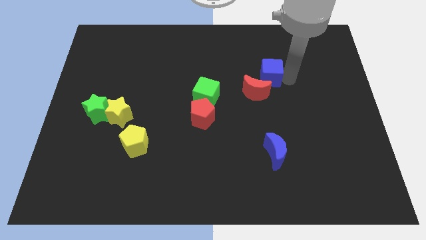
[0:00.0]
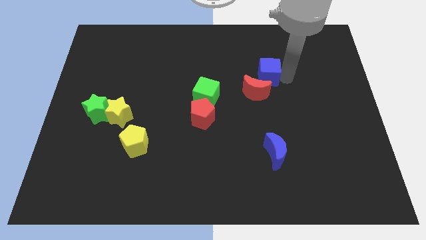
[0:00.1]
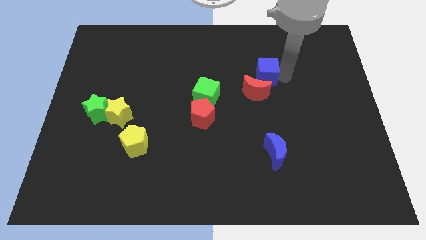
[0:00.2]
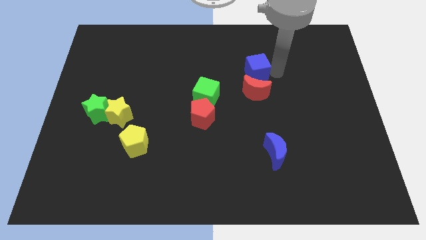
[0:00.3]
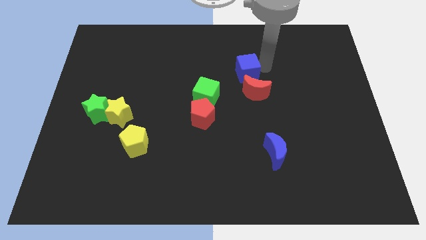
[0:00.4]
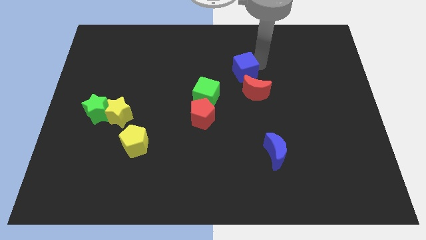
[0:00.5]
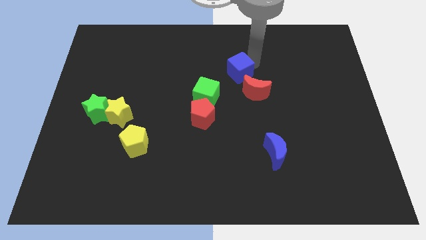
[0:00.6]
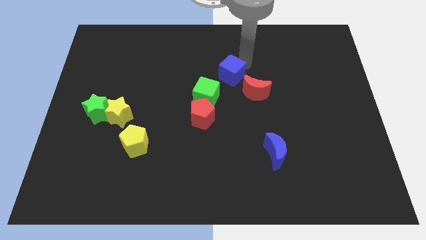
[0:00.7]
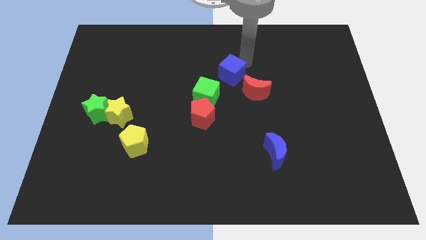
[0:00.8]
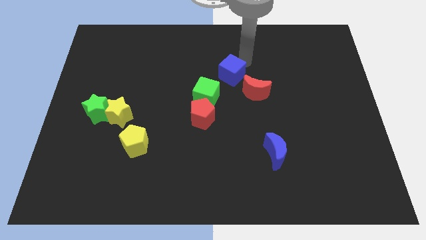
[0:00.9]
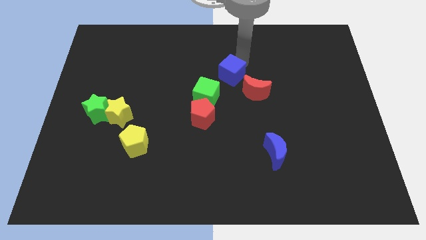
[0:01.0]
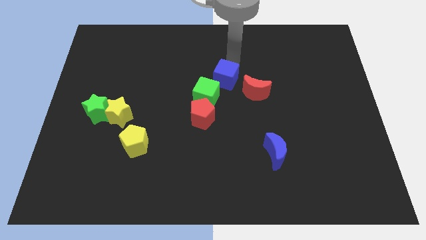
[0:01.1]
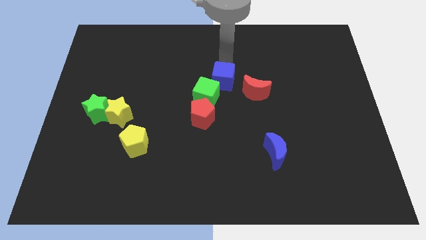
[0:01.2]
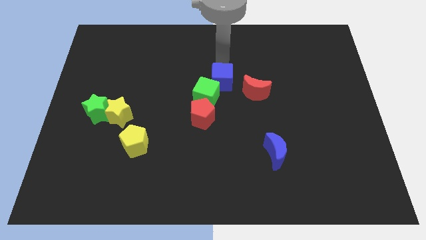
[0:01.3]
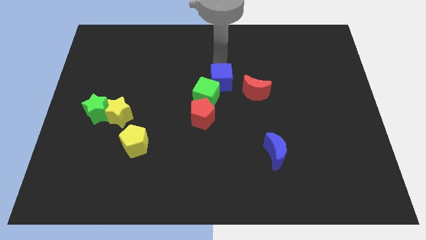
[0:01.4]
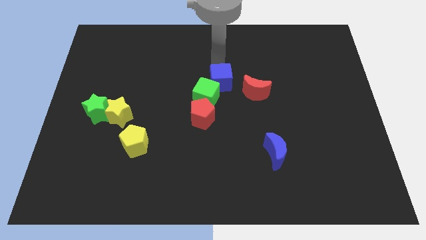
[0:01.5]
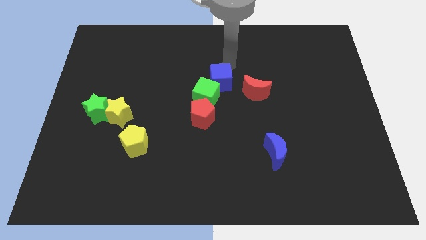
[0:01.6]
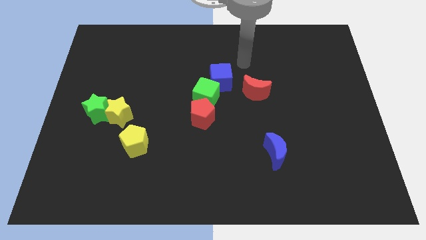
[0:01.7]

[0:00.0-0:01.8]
move the blue cube to the left side of the red crescent

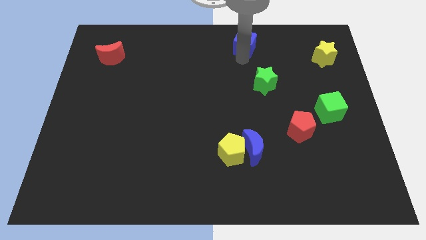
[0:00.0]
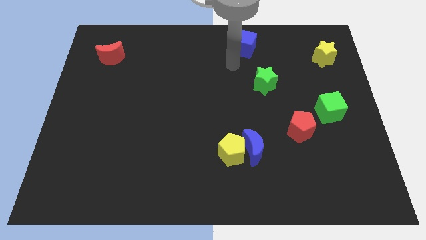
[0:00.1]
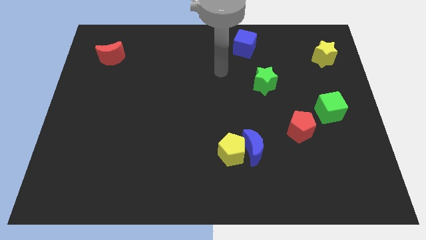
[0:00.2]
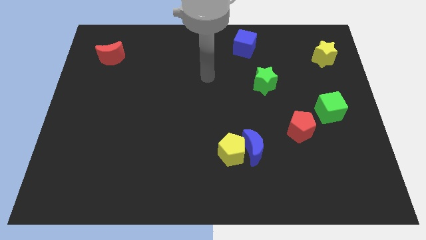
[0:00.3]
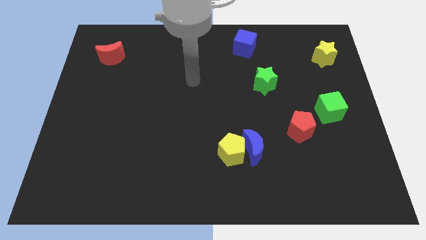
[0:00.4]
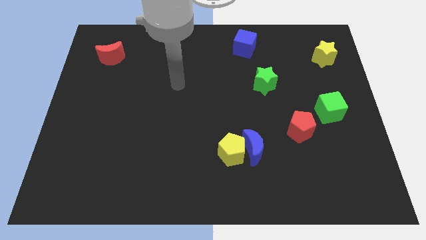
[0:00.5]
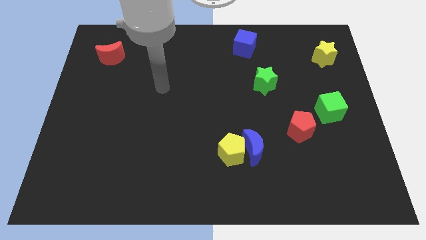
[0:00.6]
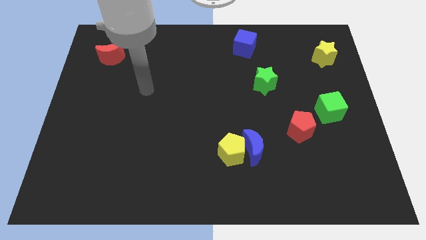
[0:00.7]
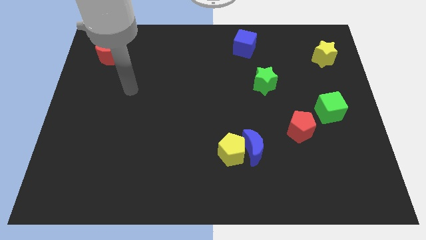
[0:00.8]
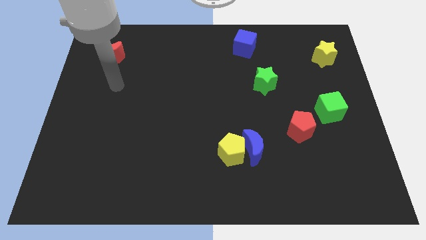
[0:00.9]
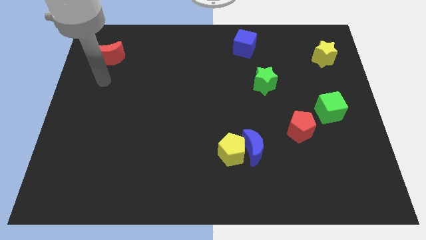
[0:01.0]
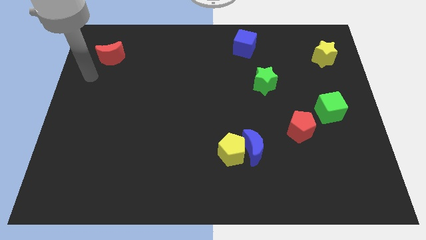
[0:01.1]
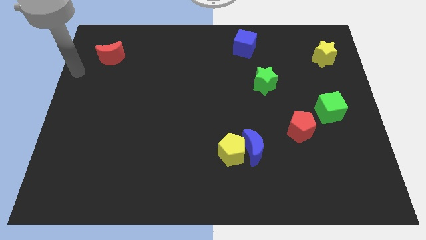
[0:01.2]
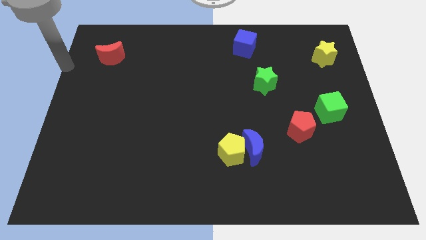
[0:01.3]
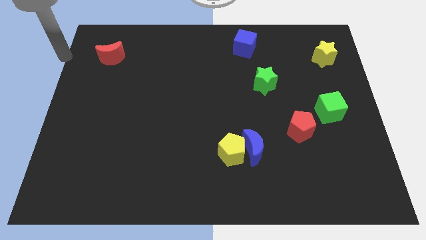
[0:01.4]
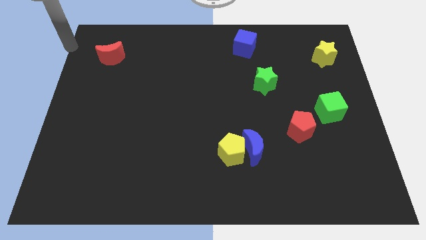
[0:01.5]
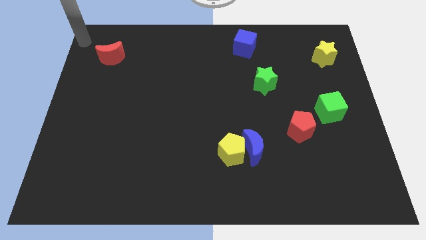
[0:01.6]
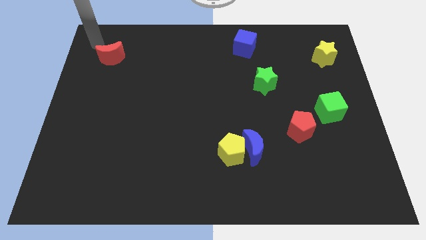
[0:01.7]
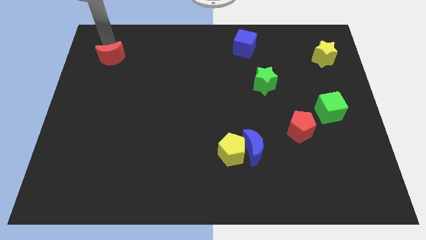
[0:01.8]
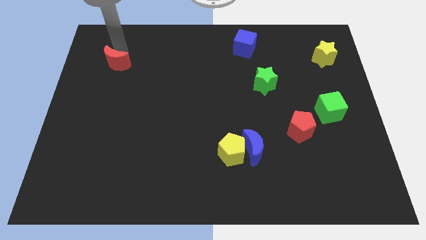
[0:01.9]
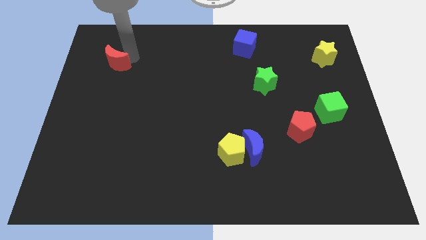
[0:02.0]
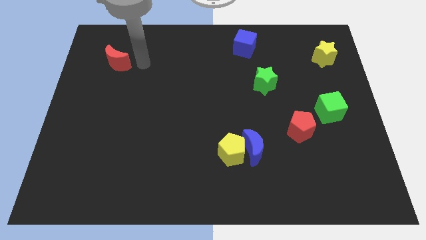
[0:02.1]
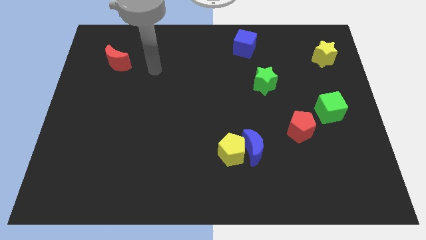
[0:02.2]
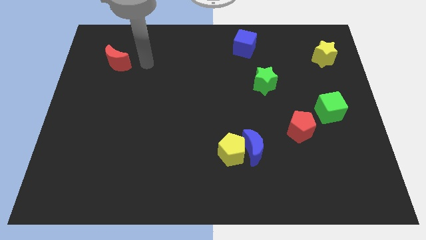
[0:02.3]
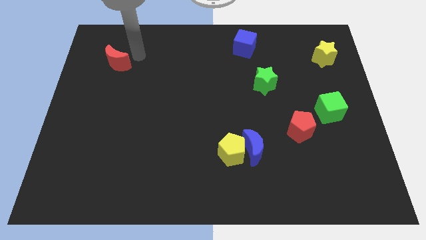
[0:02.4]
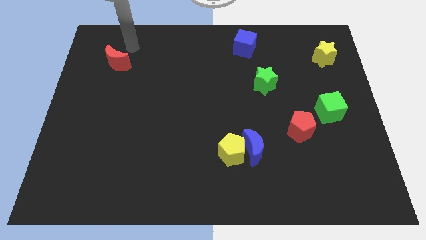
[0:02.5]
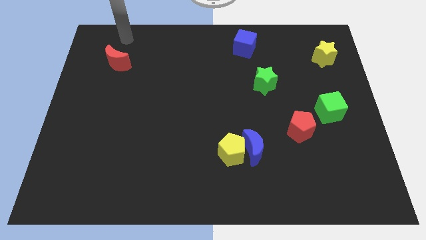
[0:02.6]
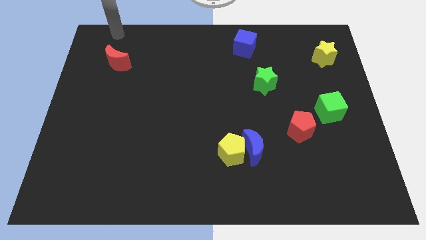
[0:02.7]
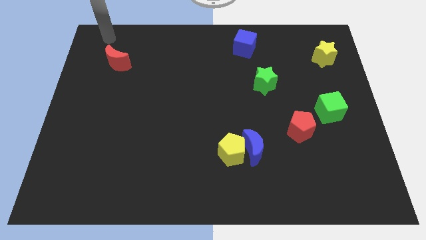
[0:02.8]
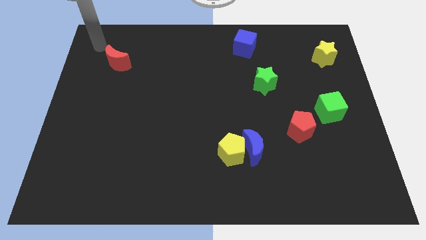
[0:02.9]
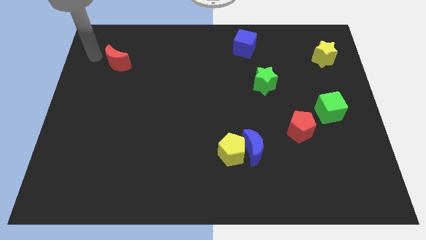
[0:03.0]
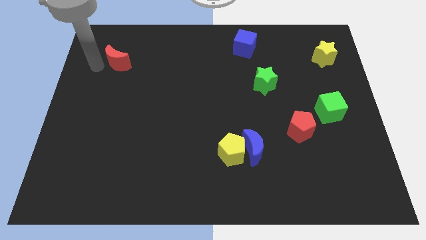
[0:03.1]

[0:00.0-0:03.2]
slightly move red moon

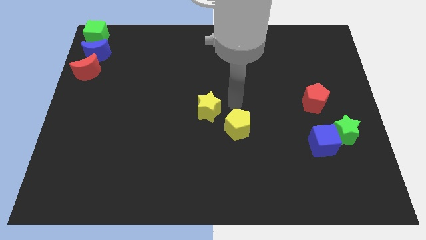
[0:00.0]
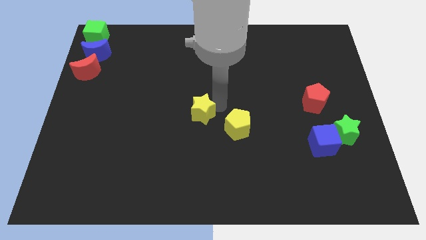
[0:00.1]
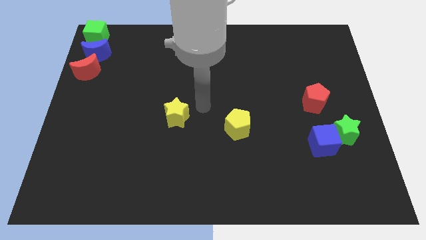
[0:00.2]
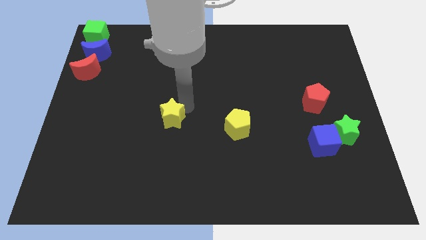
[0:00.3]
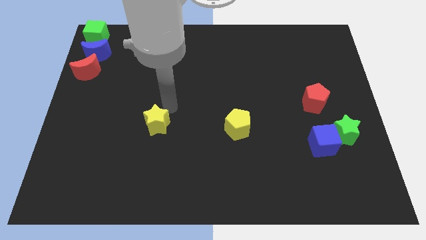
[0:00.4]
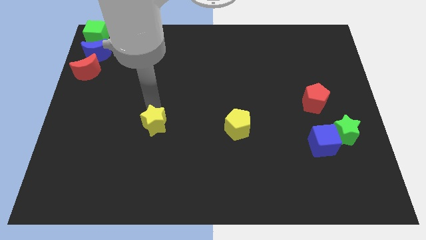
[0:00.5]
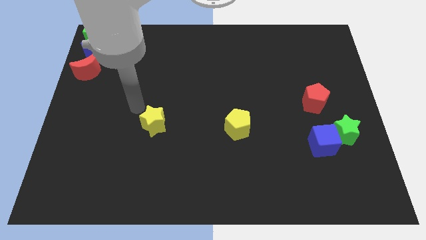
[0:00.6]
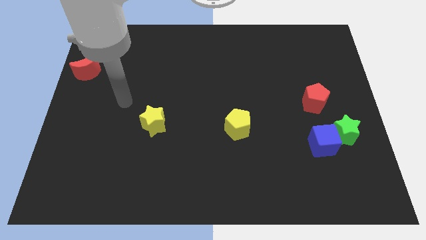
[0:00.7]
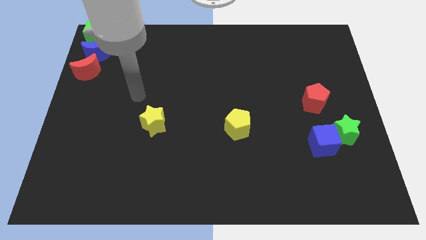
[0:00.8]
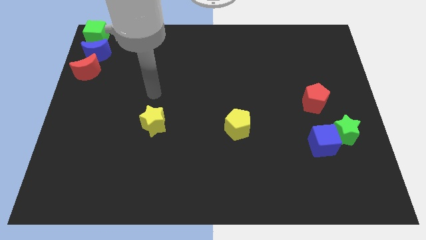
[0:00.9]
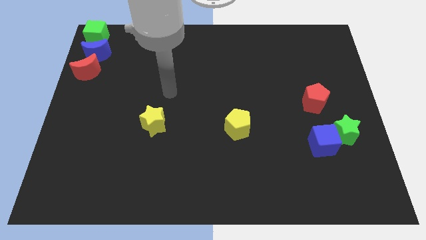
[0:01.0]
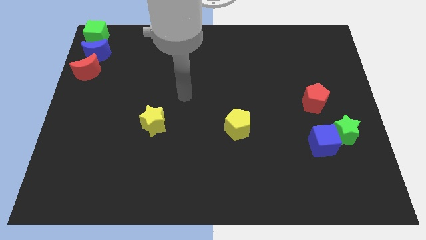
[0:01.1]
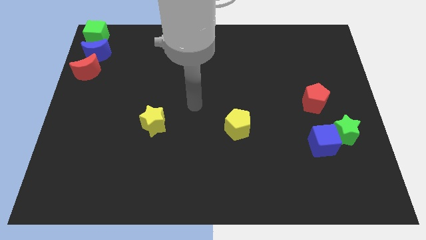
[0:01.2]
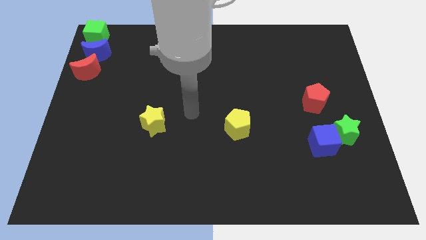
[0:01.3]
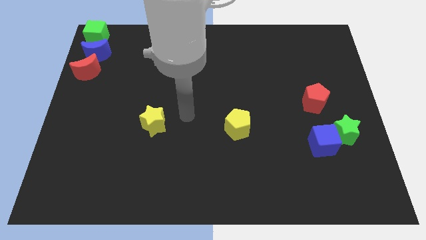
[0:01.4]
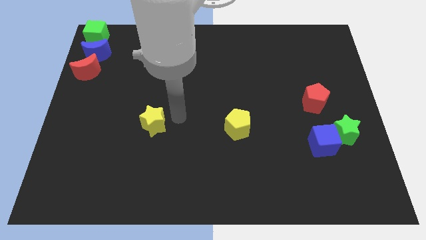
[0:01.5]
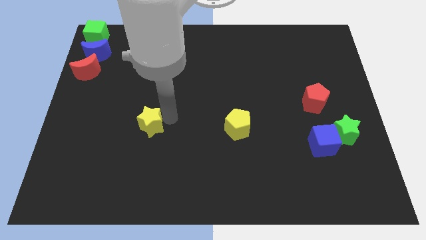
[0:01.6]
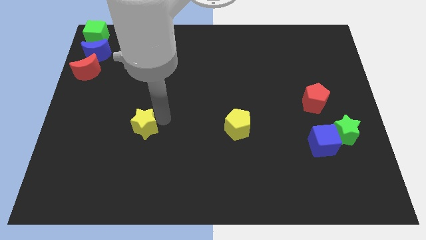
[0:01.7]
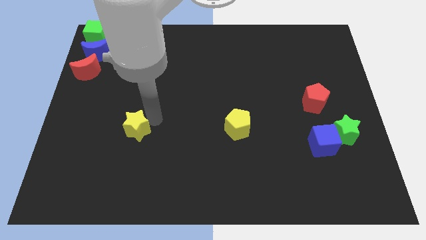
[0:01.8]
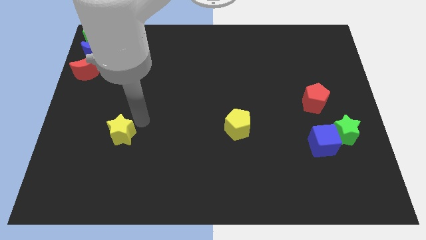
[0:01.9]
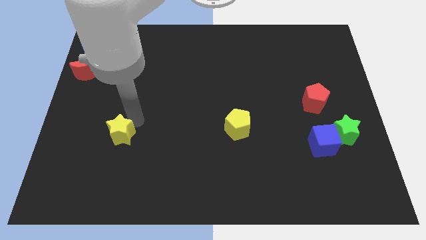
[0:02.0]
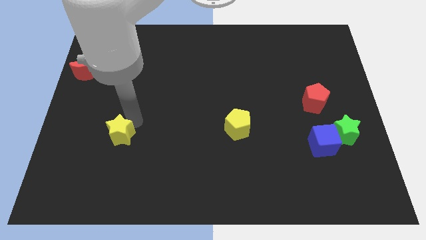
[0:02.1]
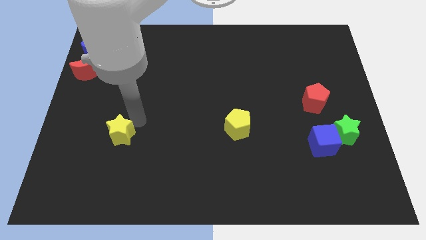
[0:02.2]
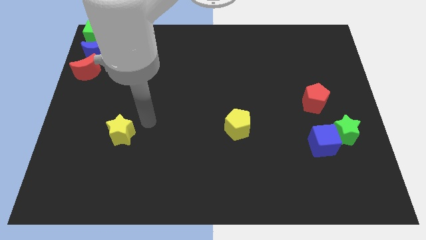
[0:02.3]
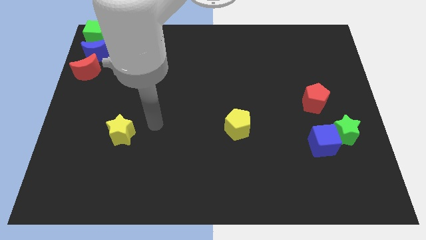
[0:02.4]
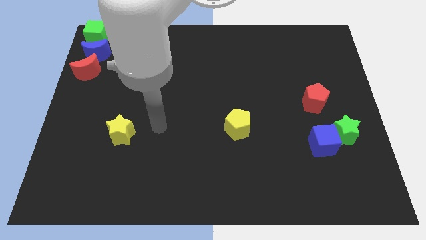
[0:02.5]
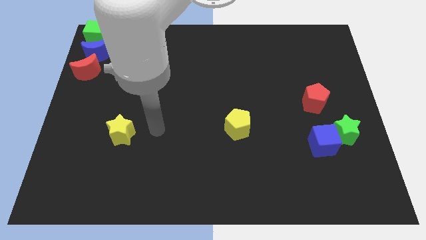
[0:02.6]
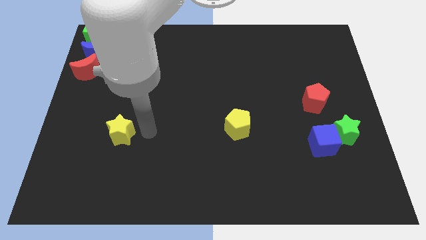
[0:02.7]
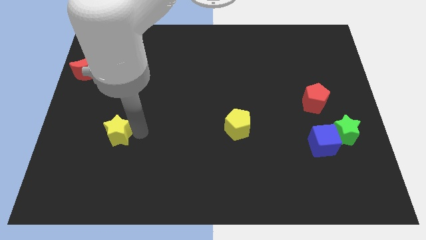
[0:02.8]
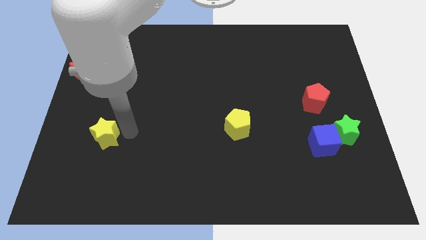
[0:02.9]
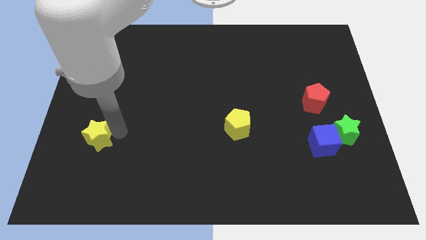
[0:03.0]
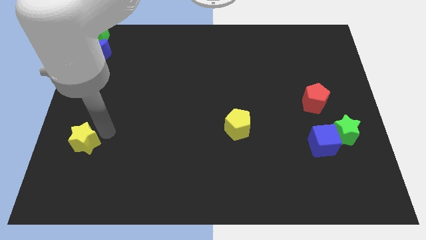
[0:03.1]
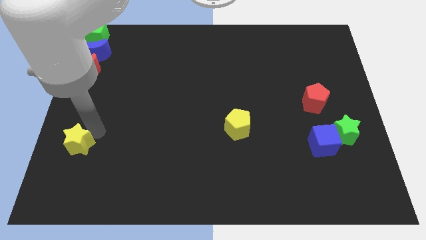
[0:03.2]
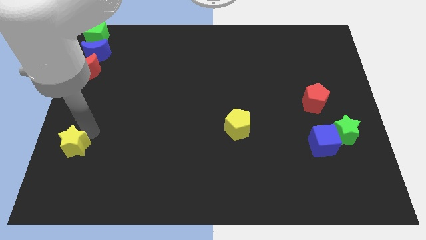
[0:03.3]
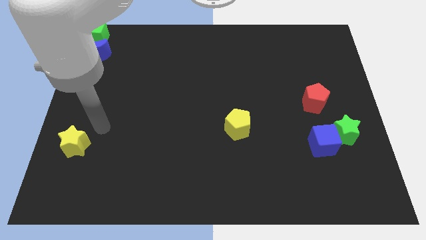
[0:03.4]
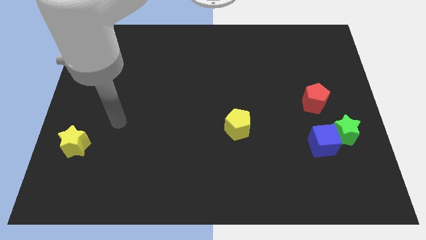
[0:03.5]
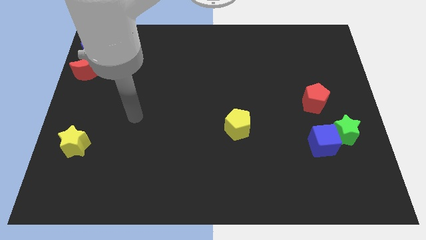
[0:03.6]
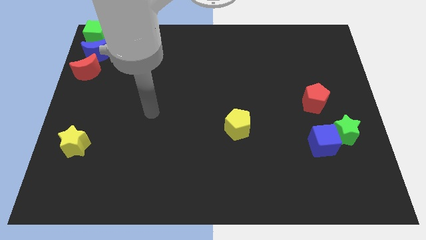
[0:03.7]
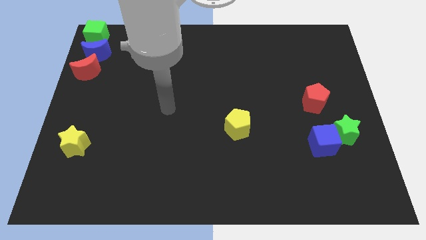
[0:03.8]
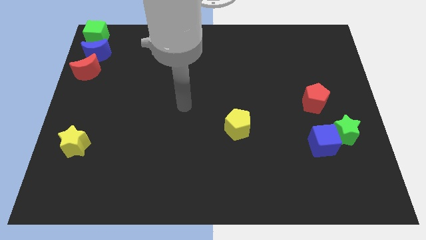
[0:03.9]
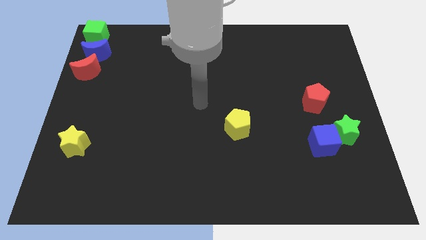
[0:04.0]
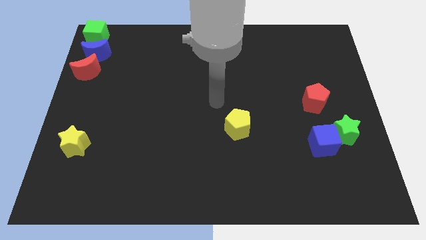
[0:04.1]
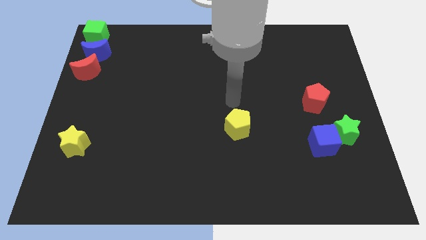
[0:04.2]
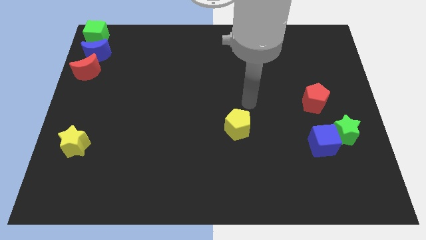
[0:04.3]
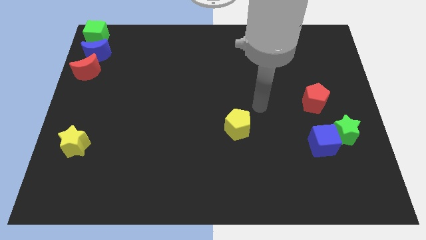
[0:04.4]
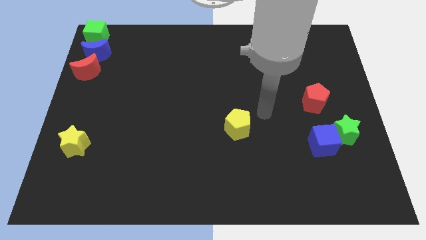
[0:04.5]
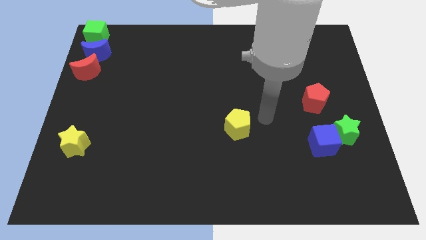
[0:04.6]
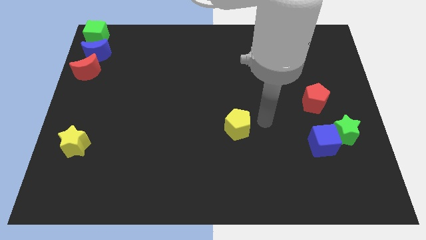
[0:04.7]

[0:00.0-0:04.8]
move yellow star to the left corner of the board
